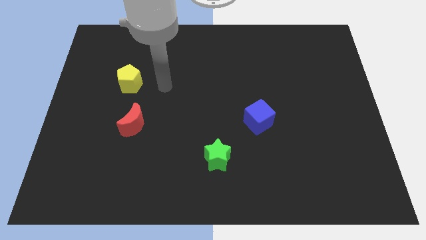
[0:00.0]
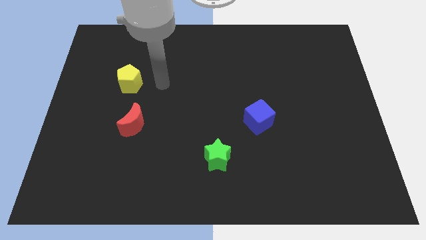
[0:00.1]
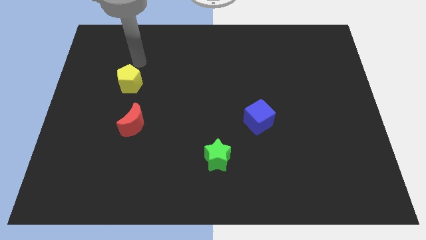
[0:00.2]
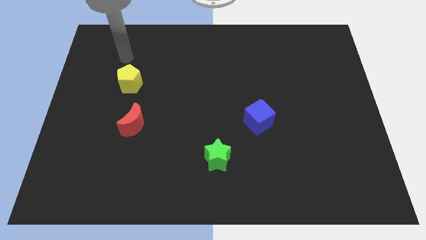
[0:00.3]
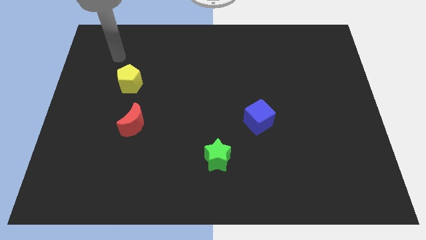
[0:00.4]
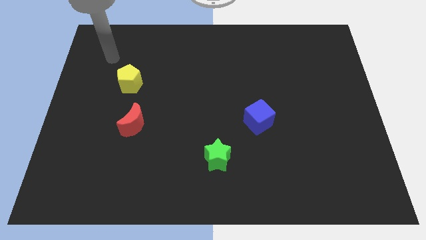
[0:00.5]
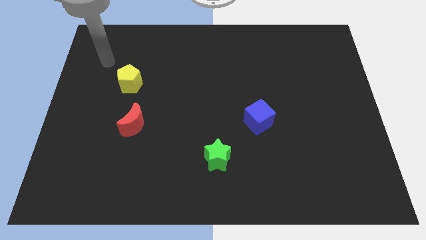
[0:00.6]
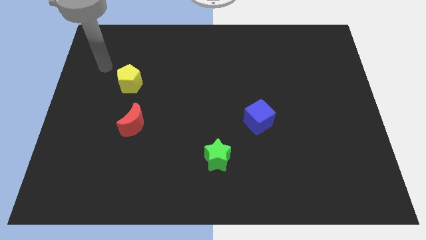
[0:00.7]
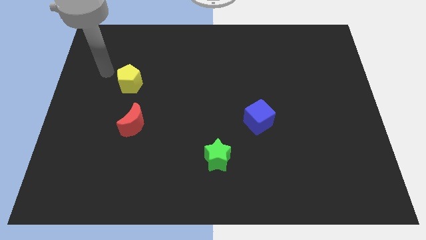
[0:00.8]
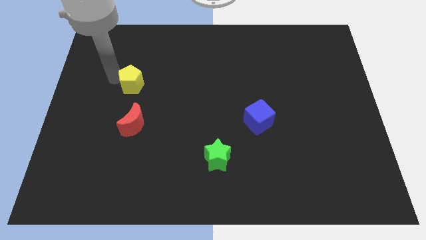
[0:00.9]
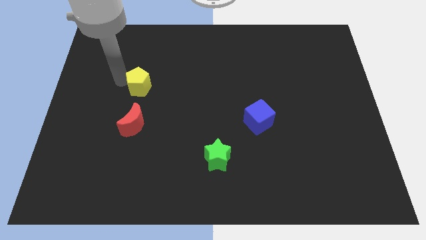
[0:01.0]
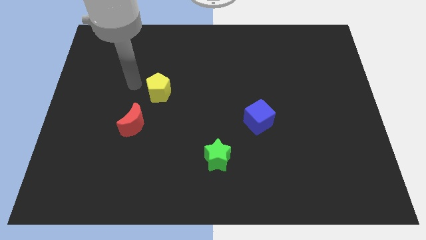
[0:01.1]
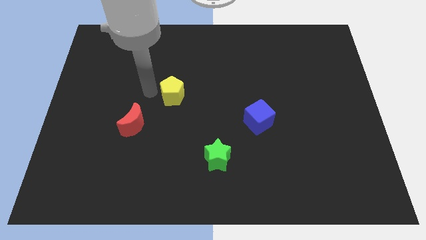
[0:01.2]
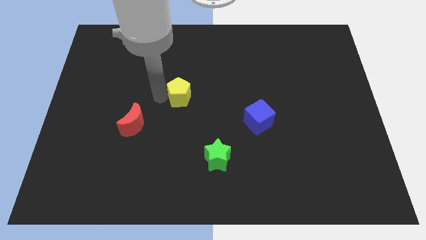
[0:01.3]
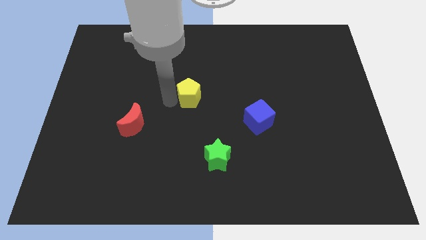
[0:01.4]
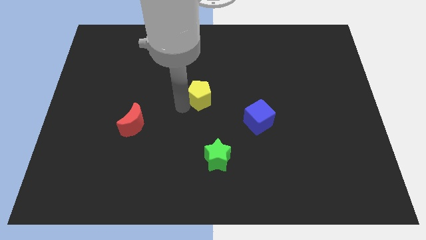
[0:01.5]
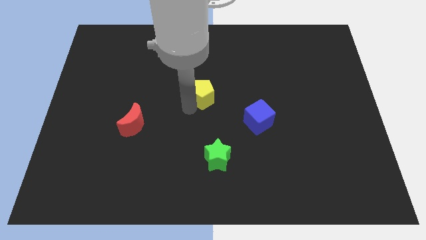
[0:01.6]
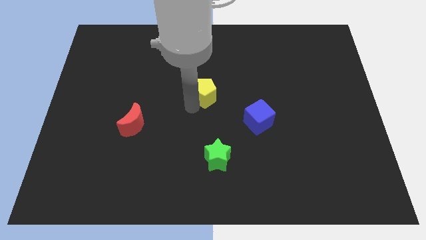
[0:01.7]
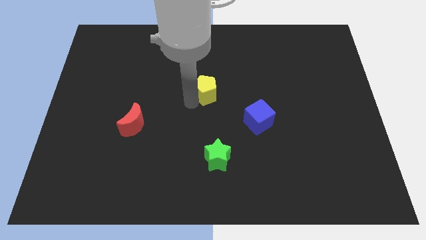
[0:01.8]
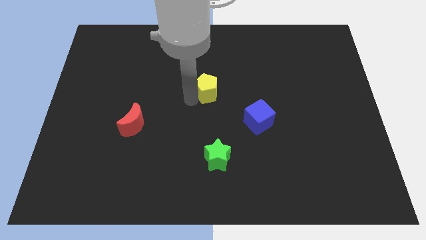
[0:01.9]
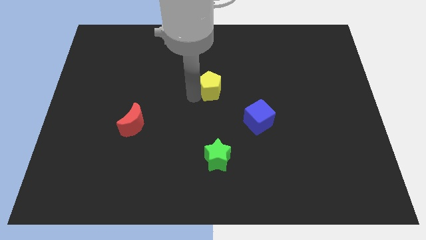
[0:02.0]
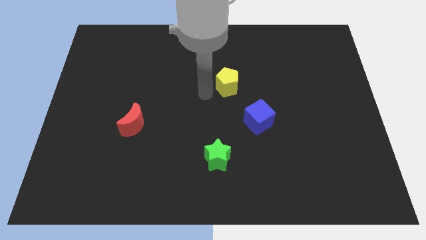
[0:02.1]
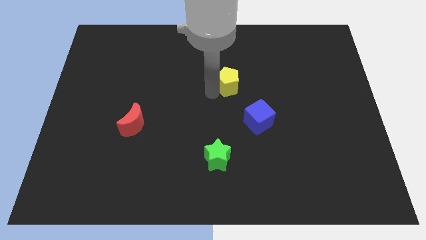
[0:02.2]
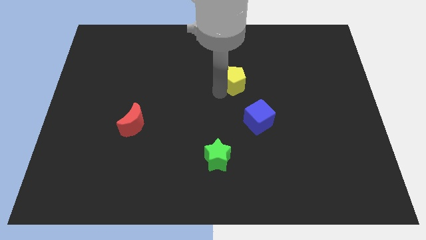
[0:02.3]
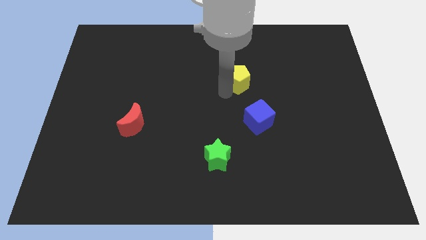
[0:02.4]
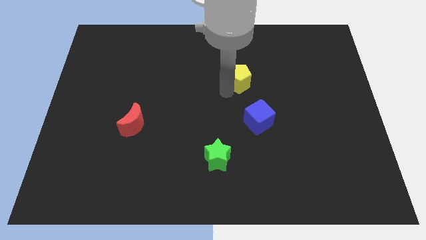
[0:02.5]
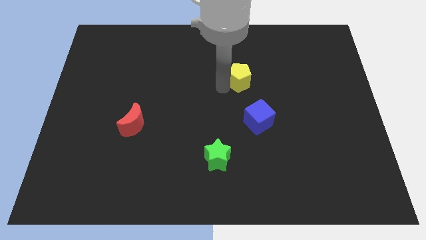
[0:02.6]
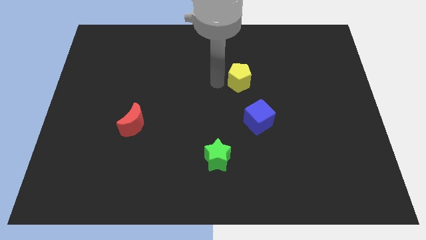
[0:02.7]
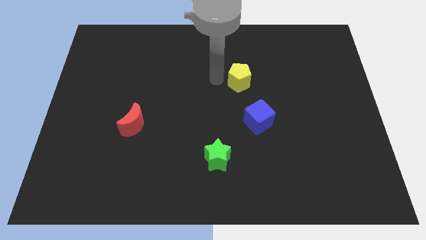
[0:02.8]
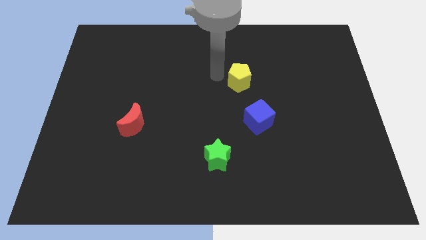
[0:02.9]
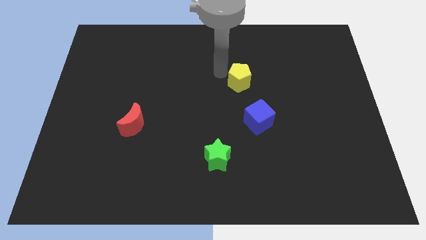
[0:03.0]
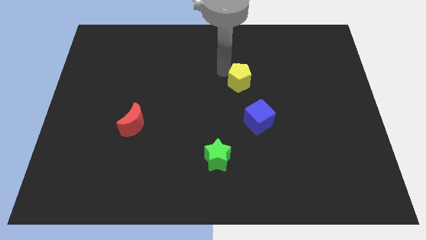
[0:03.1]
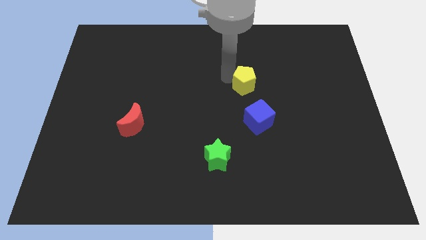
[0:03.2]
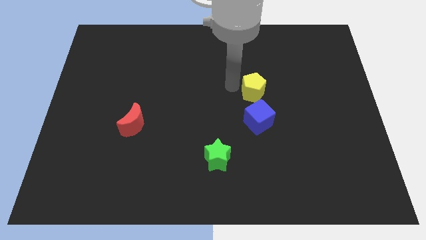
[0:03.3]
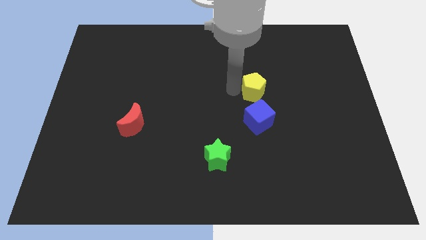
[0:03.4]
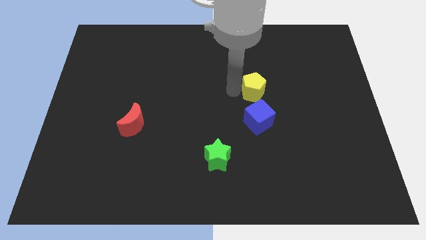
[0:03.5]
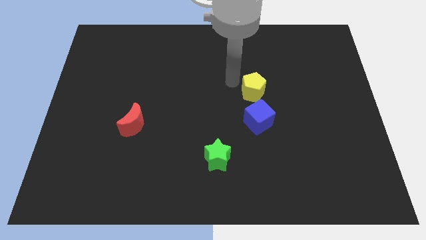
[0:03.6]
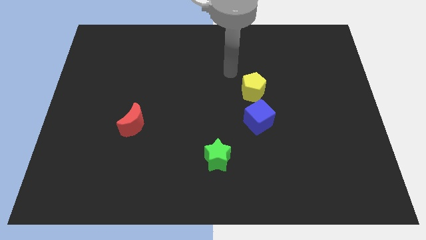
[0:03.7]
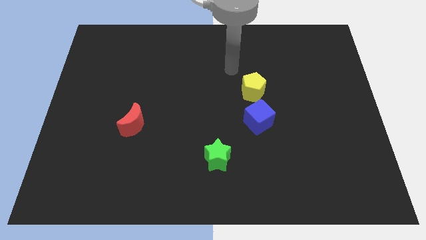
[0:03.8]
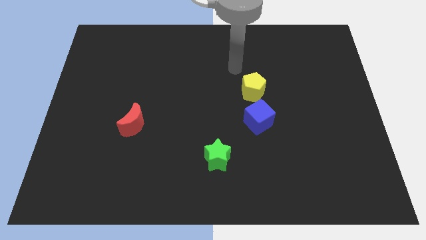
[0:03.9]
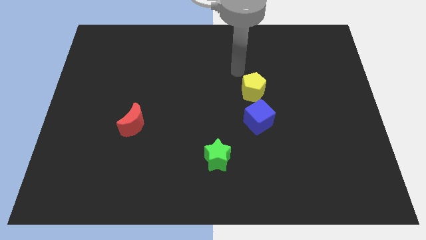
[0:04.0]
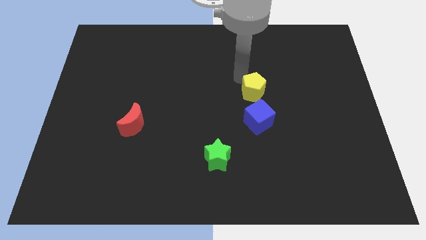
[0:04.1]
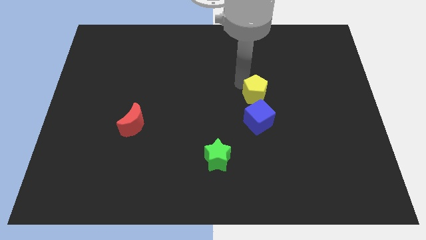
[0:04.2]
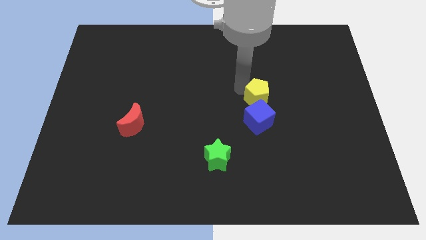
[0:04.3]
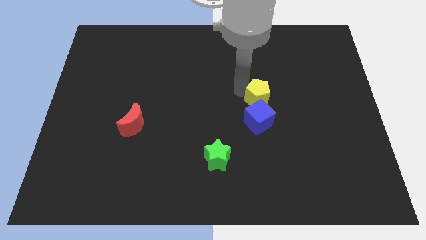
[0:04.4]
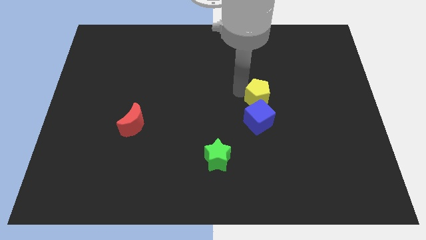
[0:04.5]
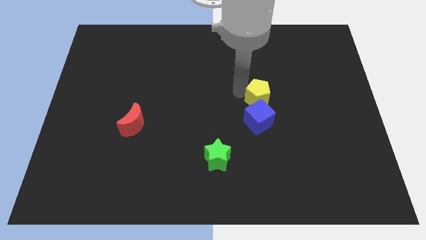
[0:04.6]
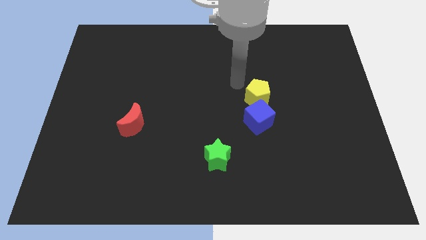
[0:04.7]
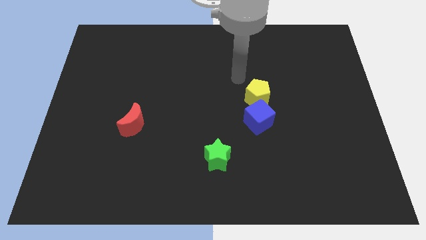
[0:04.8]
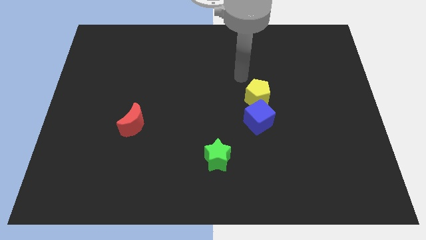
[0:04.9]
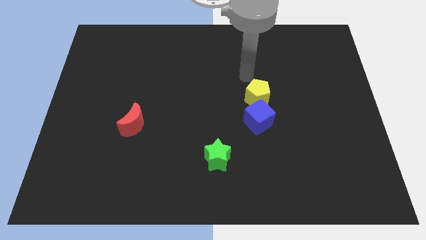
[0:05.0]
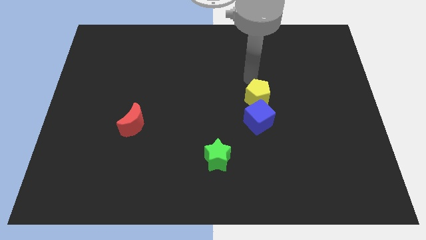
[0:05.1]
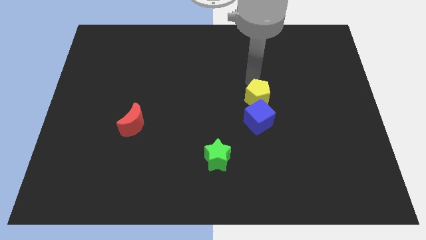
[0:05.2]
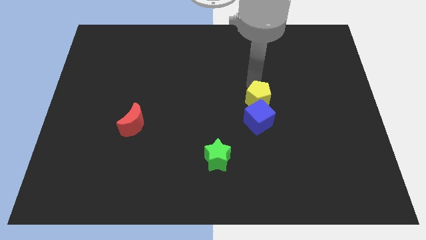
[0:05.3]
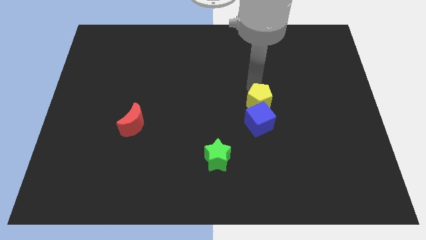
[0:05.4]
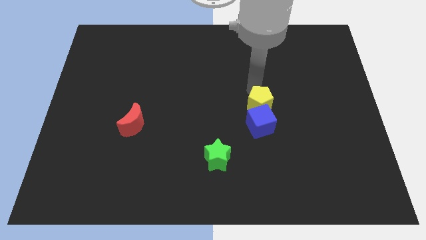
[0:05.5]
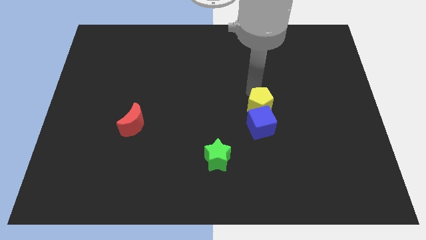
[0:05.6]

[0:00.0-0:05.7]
slide the yellow pentagon to the cube

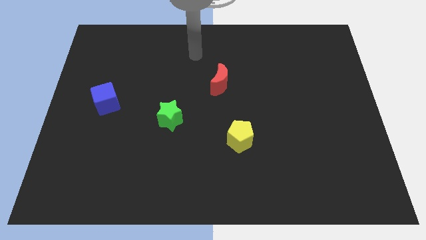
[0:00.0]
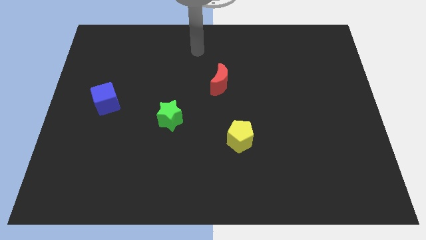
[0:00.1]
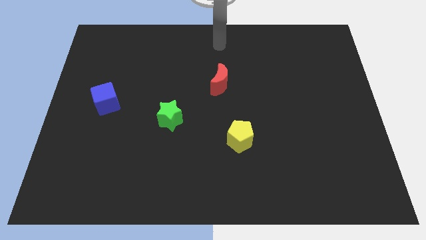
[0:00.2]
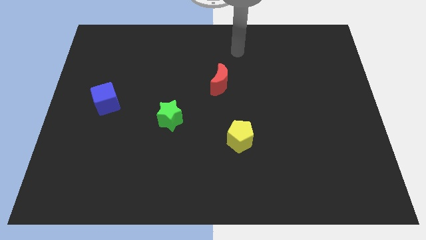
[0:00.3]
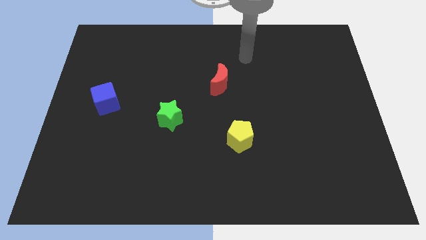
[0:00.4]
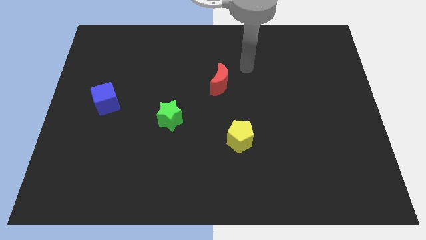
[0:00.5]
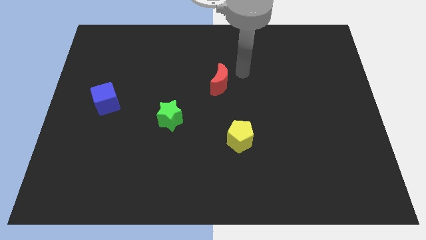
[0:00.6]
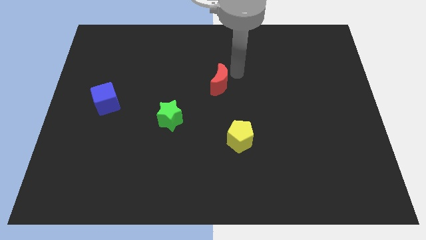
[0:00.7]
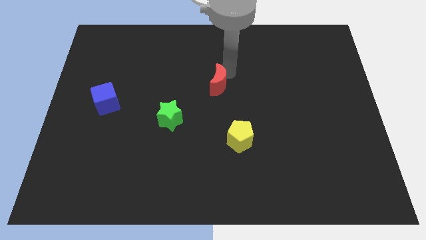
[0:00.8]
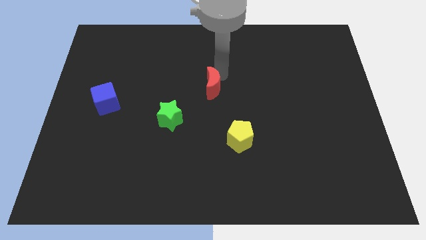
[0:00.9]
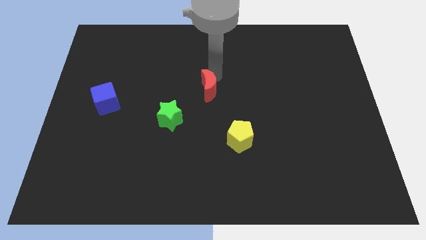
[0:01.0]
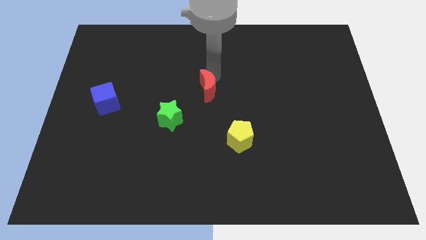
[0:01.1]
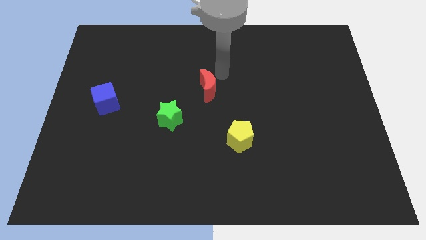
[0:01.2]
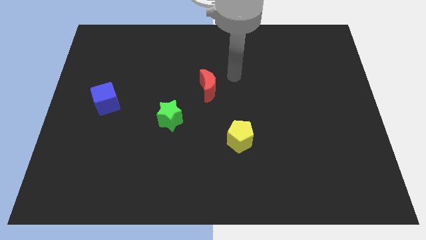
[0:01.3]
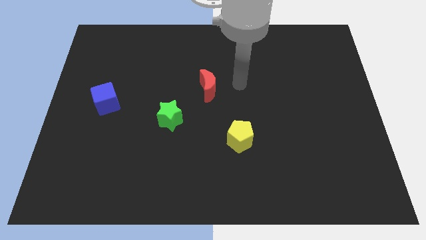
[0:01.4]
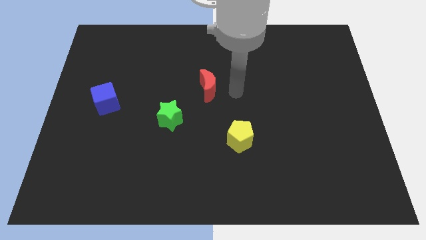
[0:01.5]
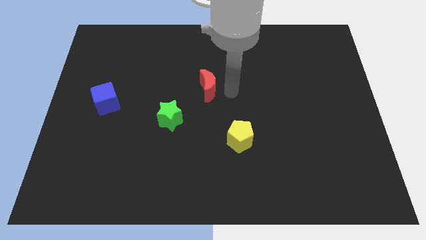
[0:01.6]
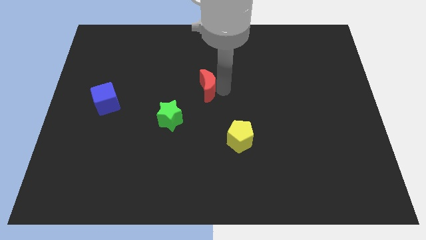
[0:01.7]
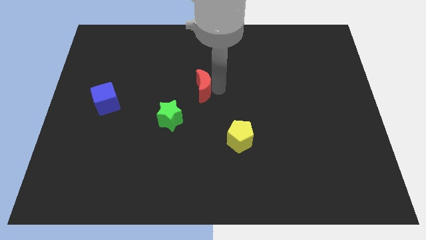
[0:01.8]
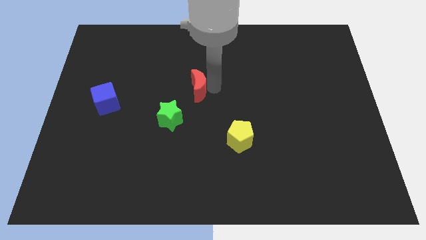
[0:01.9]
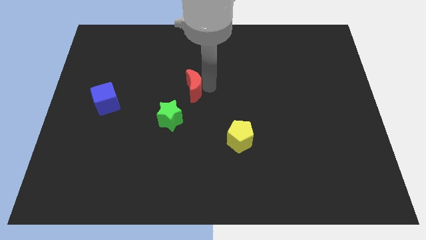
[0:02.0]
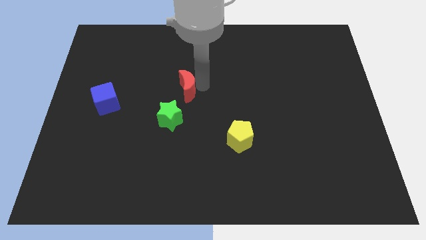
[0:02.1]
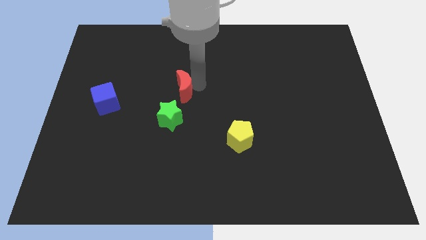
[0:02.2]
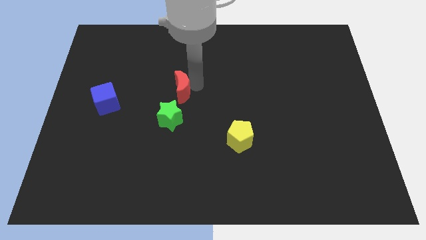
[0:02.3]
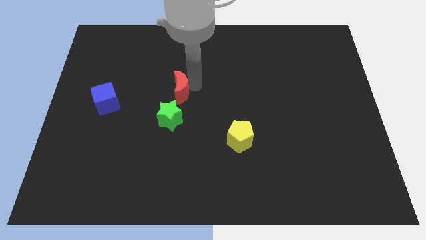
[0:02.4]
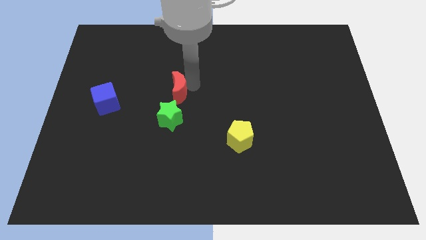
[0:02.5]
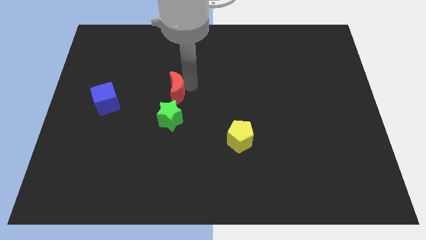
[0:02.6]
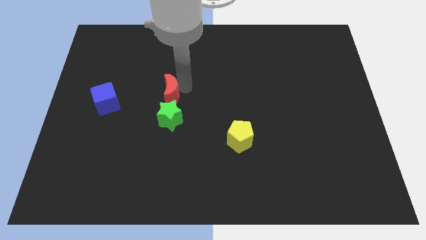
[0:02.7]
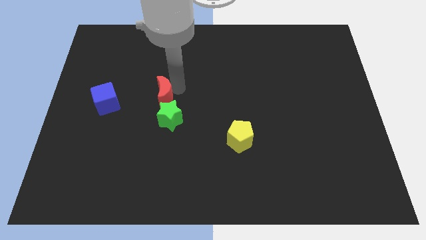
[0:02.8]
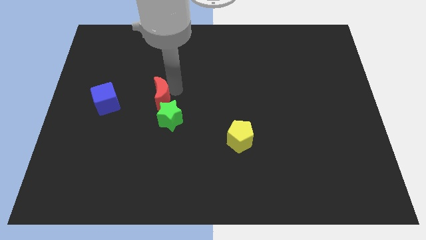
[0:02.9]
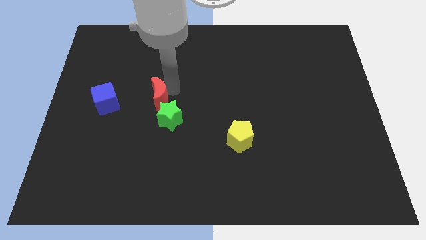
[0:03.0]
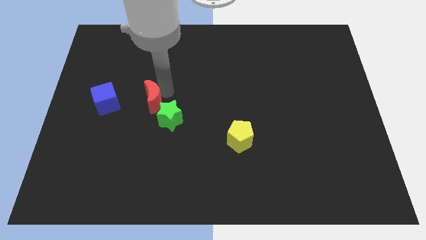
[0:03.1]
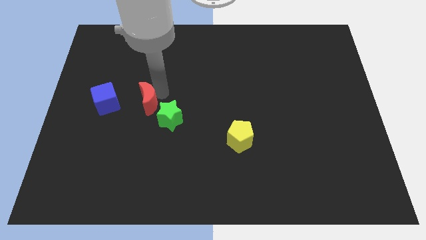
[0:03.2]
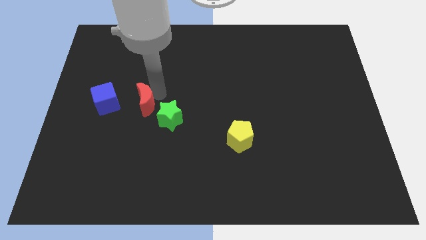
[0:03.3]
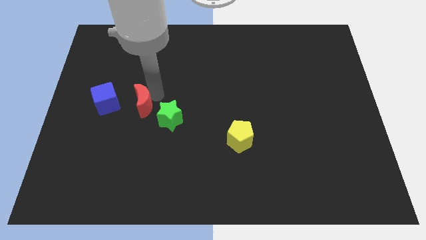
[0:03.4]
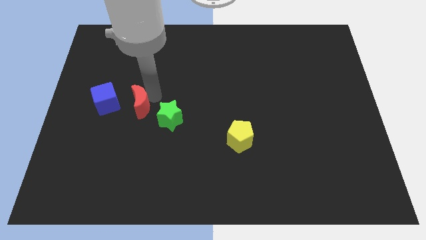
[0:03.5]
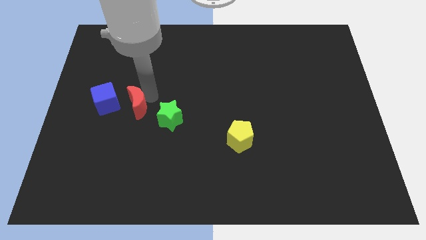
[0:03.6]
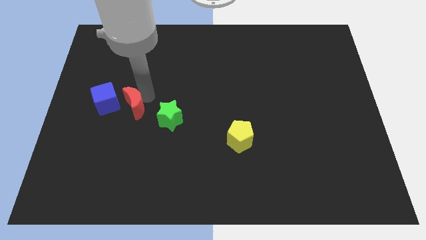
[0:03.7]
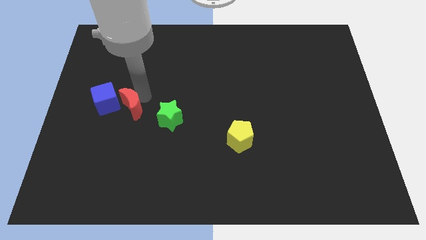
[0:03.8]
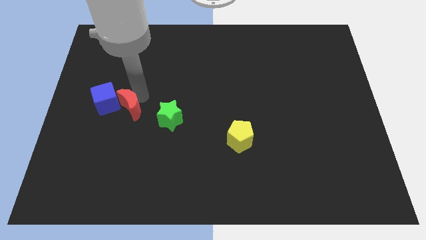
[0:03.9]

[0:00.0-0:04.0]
move the red block close to the blue cube
